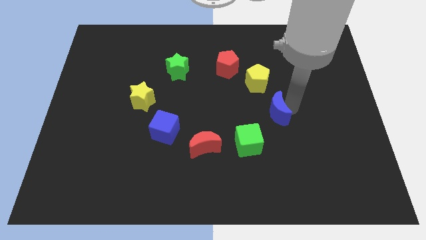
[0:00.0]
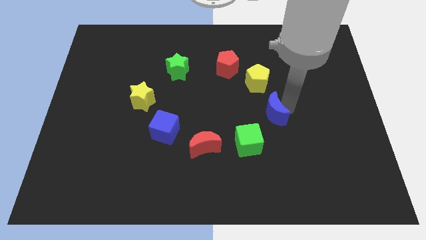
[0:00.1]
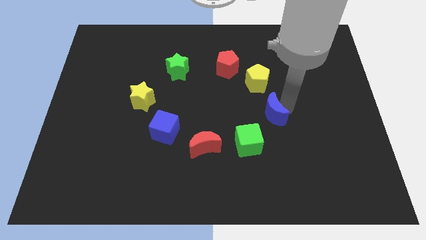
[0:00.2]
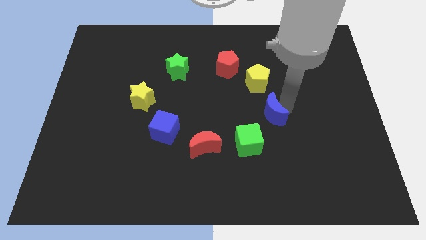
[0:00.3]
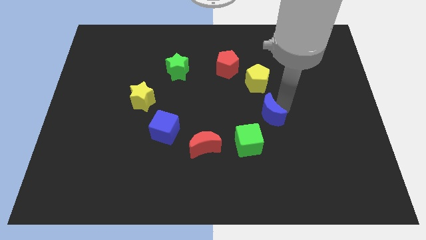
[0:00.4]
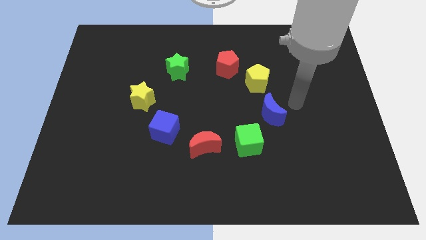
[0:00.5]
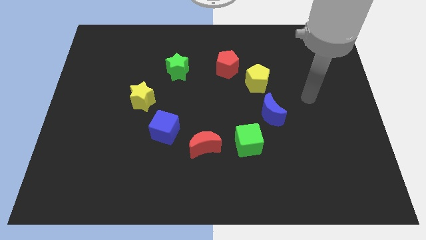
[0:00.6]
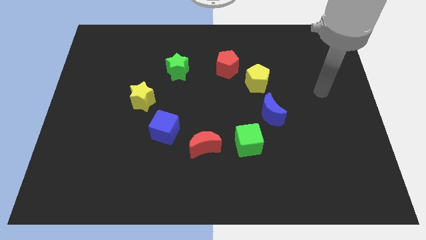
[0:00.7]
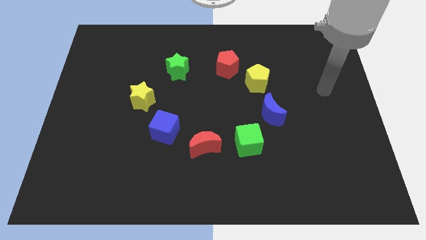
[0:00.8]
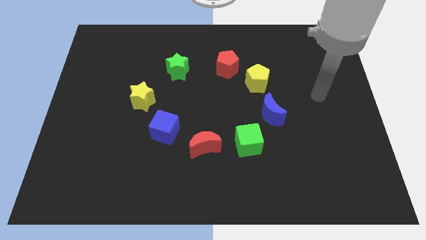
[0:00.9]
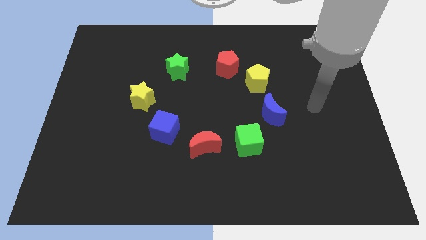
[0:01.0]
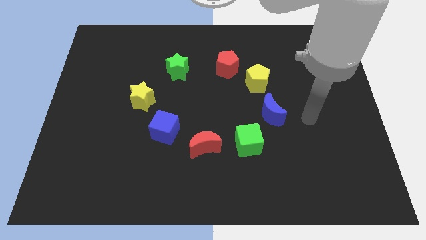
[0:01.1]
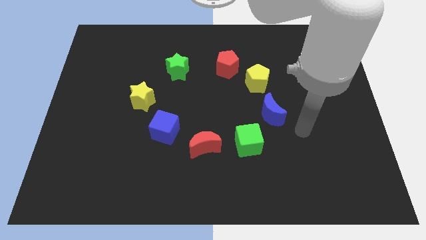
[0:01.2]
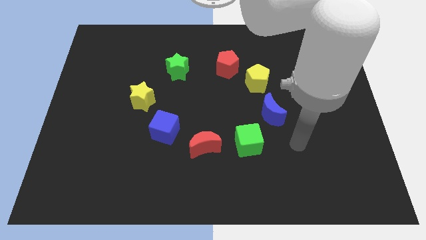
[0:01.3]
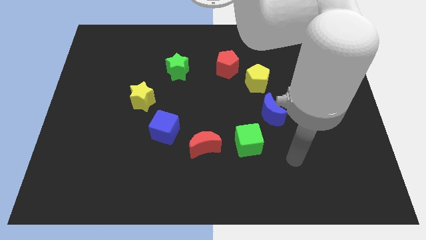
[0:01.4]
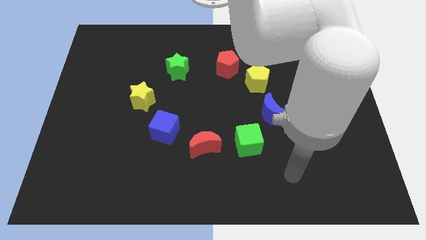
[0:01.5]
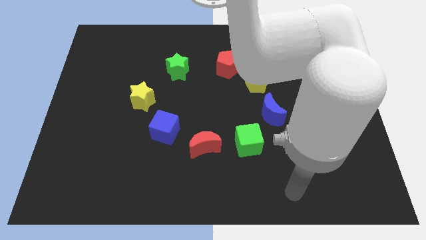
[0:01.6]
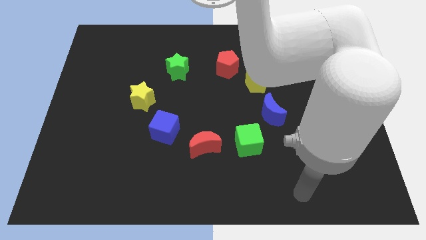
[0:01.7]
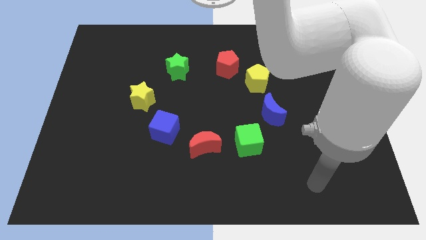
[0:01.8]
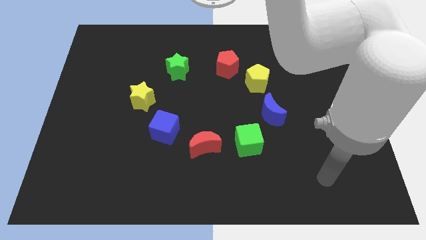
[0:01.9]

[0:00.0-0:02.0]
push the blue moon slightly to the left

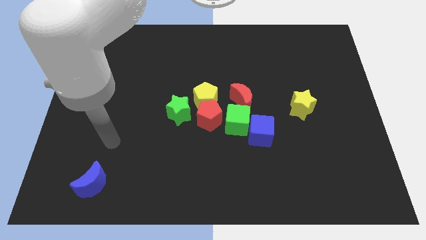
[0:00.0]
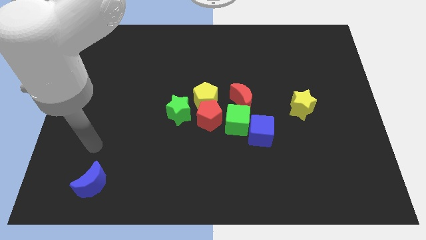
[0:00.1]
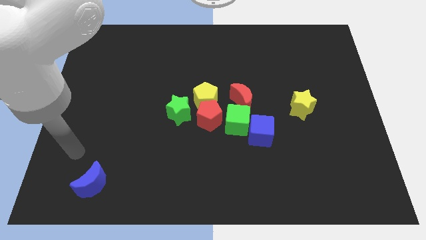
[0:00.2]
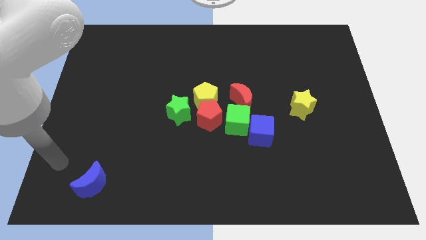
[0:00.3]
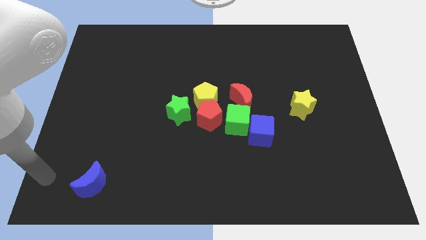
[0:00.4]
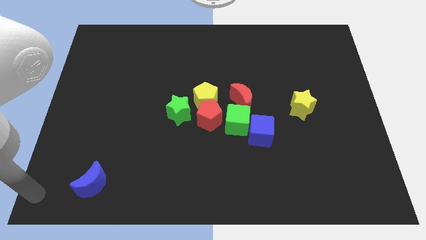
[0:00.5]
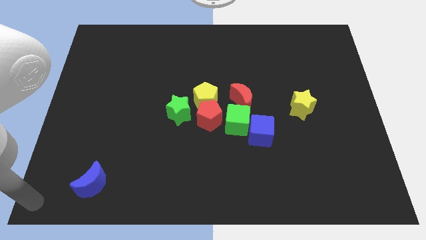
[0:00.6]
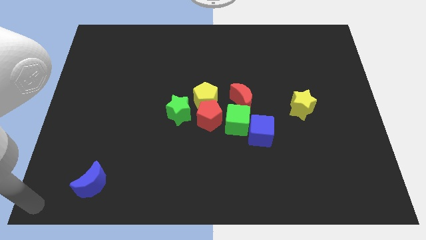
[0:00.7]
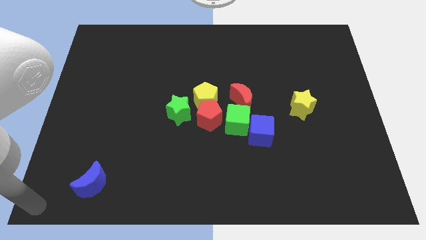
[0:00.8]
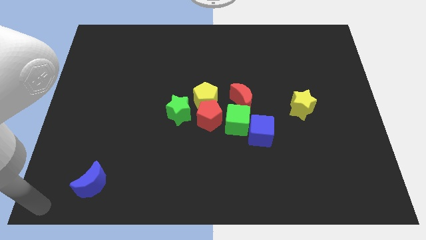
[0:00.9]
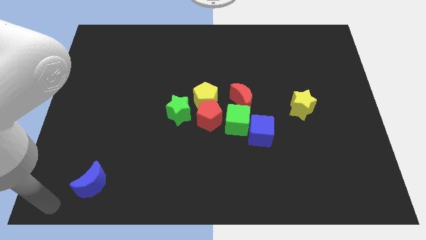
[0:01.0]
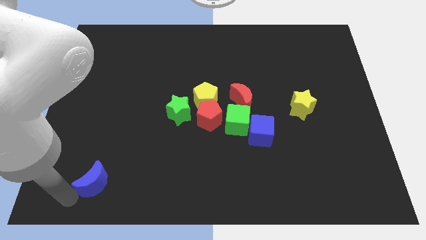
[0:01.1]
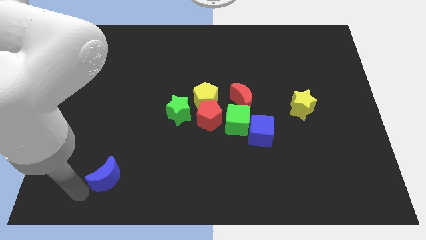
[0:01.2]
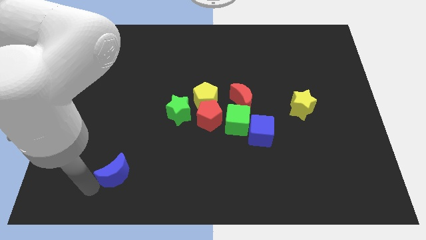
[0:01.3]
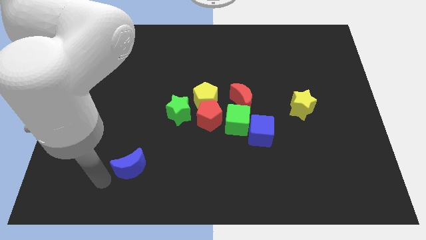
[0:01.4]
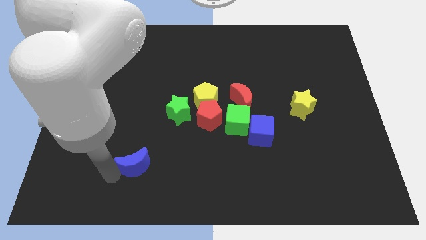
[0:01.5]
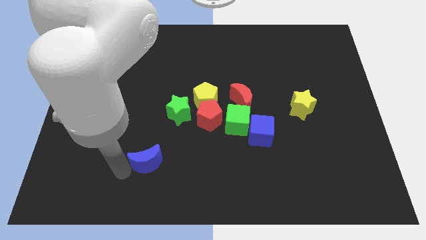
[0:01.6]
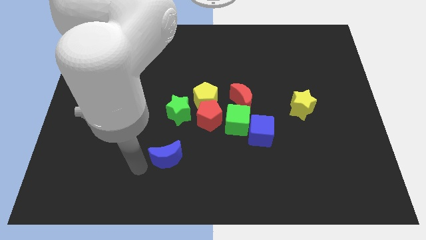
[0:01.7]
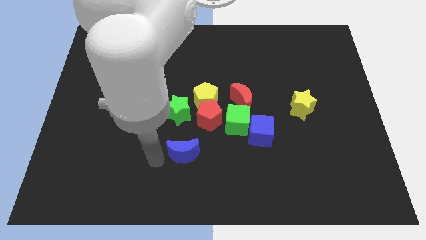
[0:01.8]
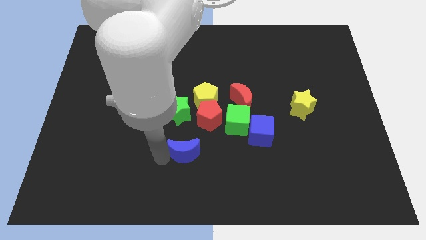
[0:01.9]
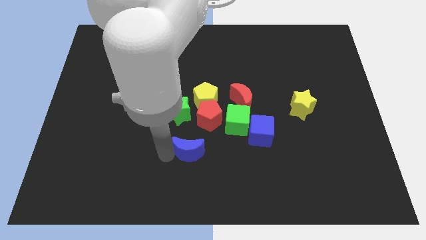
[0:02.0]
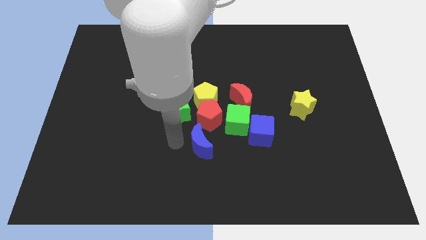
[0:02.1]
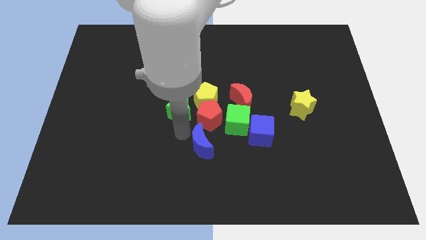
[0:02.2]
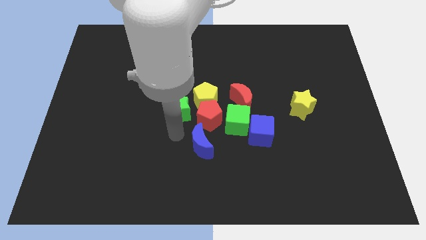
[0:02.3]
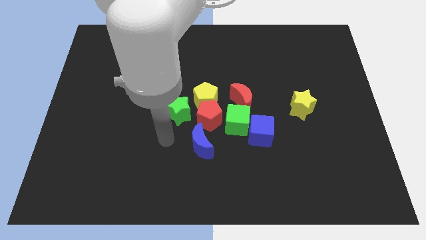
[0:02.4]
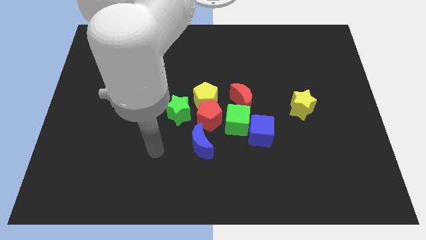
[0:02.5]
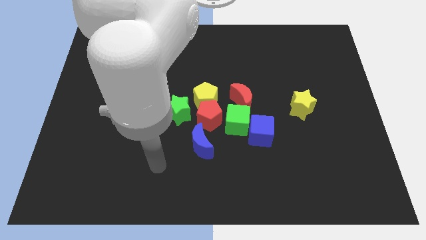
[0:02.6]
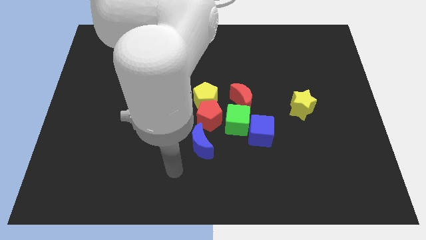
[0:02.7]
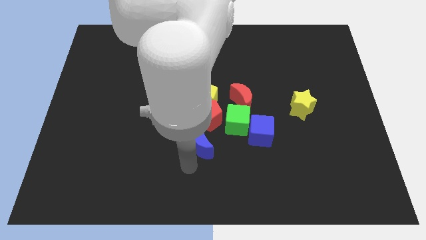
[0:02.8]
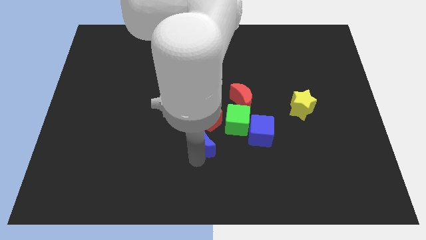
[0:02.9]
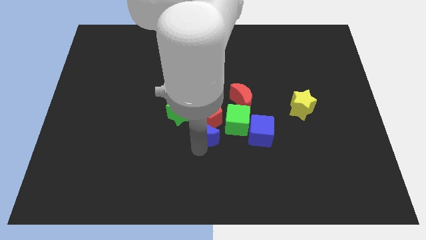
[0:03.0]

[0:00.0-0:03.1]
place blue crescent at the bottom of red pentagon

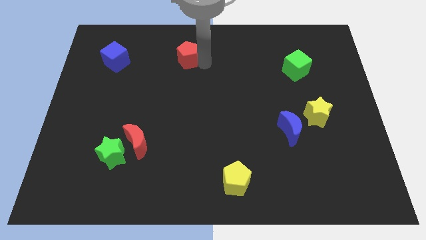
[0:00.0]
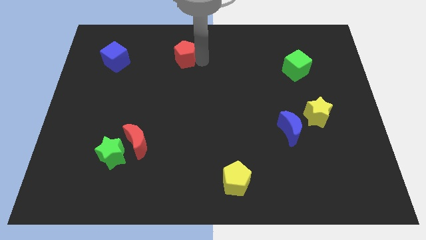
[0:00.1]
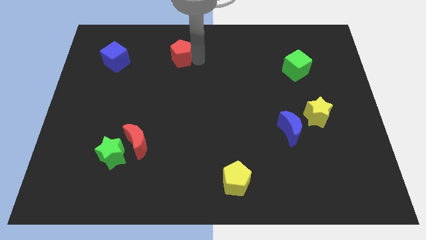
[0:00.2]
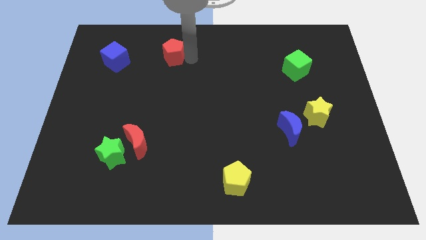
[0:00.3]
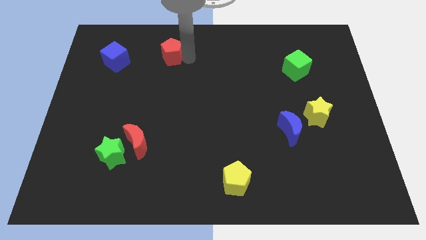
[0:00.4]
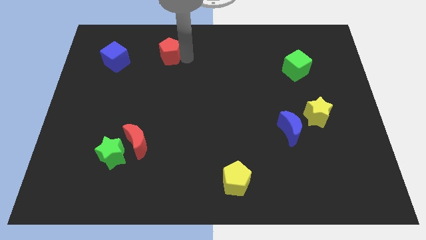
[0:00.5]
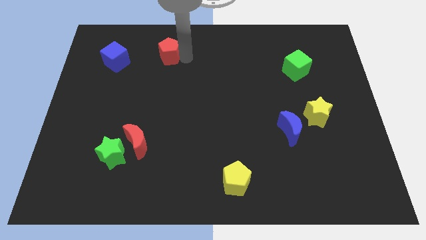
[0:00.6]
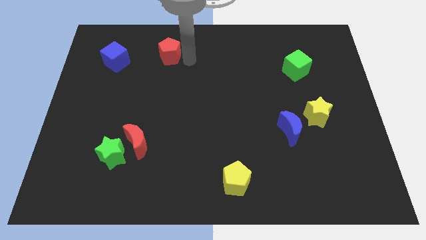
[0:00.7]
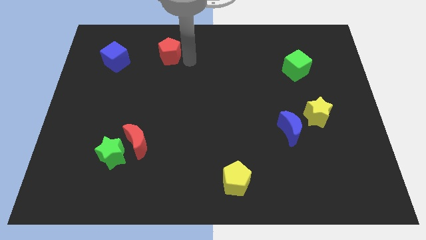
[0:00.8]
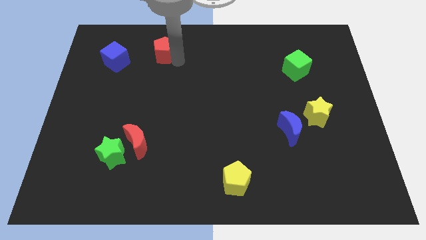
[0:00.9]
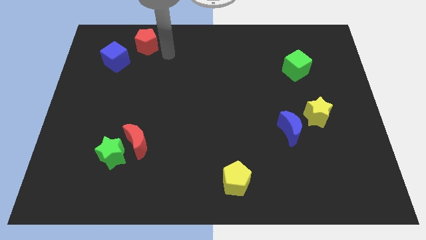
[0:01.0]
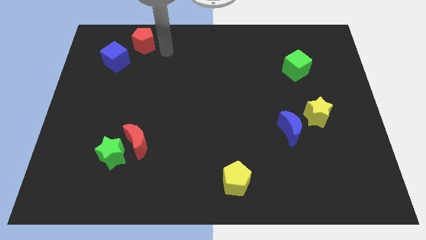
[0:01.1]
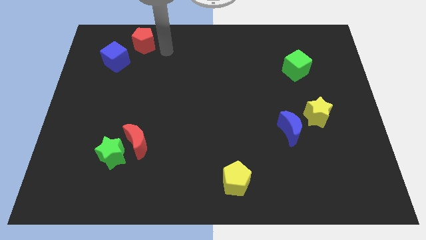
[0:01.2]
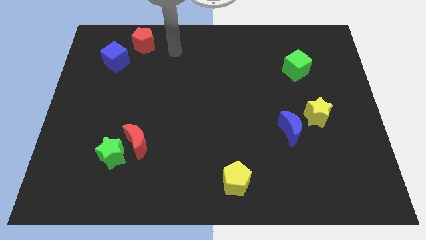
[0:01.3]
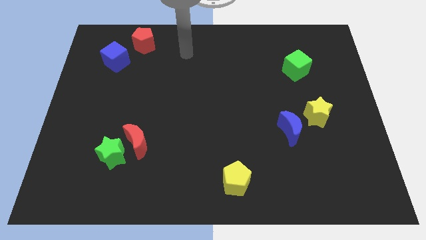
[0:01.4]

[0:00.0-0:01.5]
push the red pentagon to the top right of the blue cube

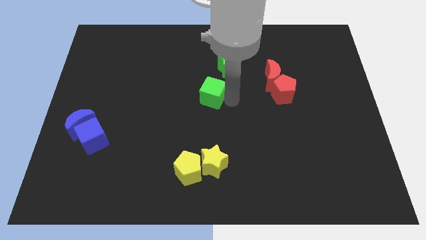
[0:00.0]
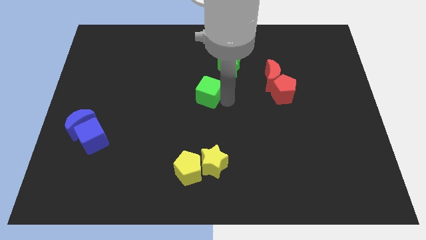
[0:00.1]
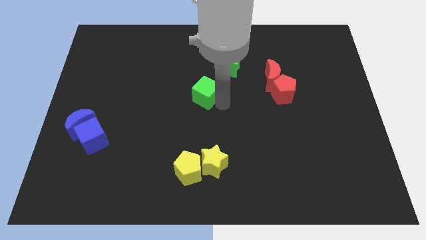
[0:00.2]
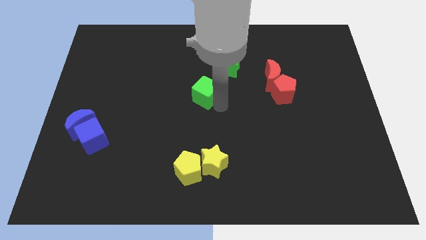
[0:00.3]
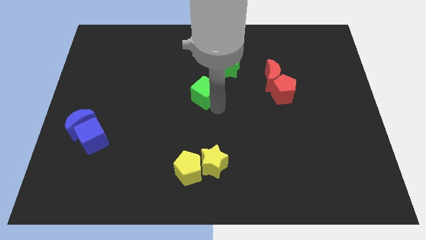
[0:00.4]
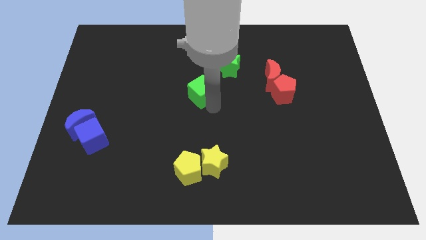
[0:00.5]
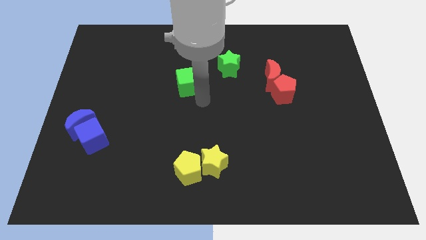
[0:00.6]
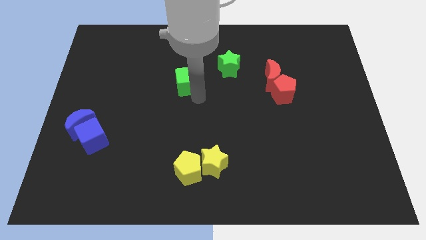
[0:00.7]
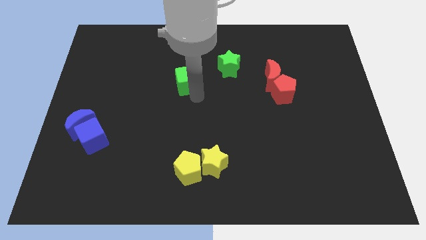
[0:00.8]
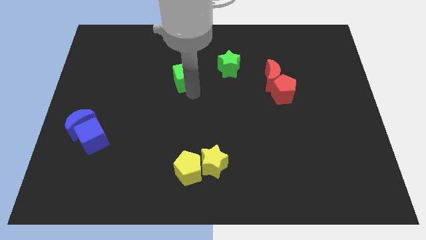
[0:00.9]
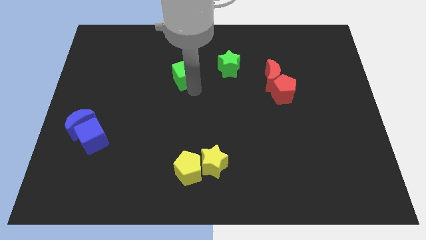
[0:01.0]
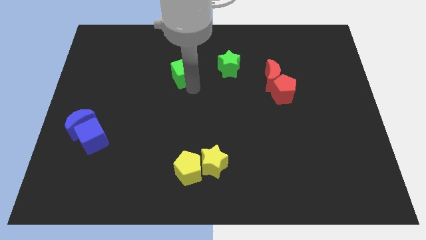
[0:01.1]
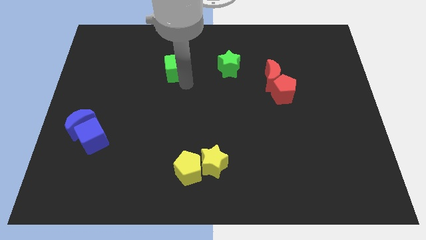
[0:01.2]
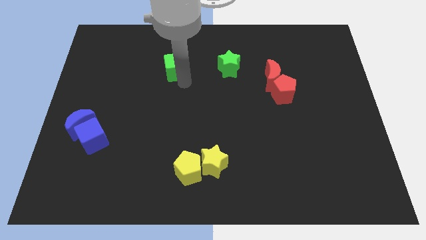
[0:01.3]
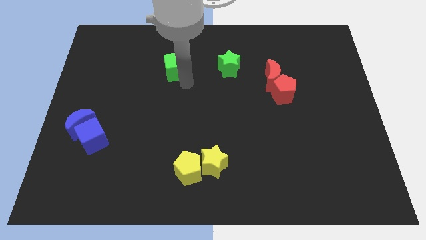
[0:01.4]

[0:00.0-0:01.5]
move the green cube to the left of the green star

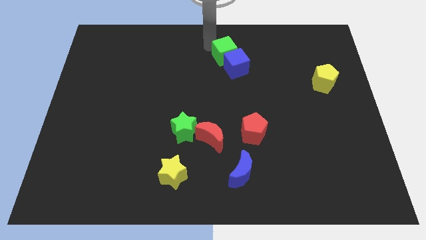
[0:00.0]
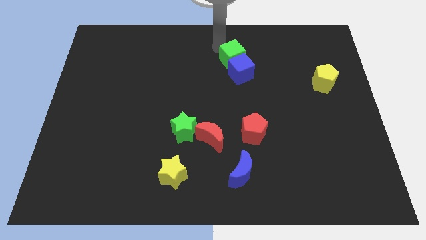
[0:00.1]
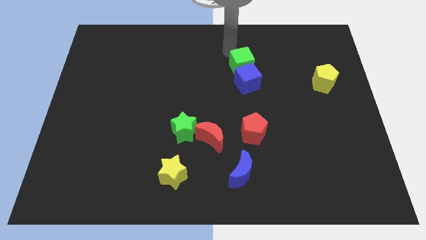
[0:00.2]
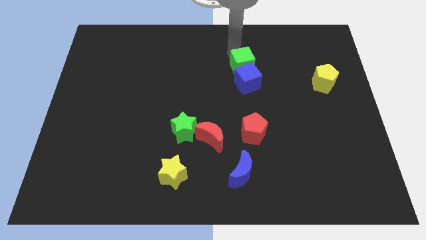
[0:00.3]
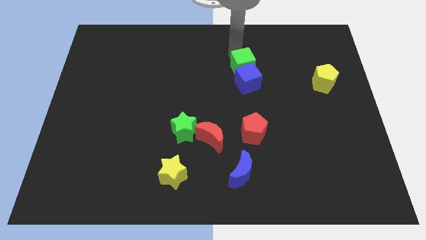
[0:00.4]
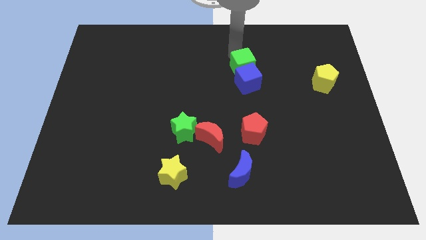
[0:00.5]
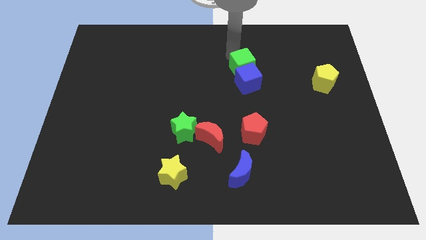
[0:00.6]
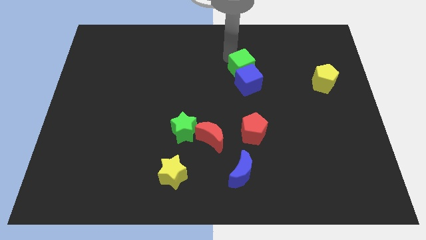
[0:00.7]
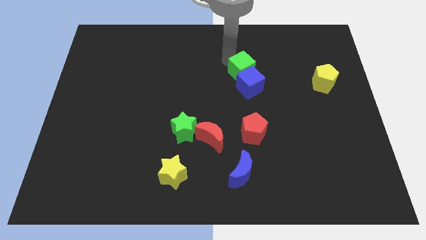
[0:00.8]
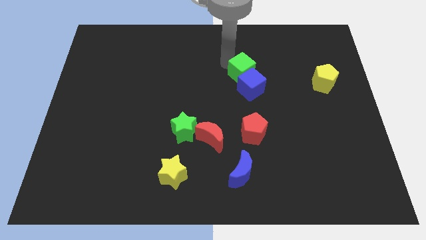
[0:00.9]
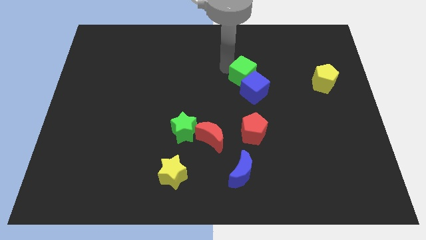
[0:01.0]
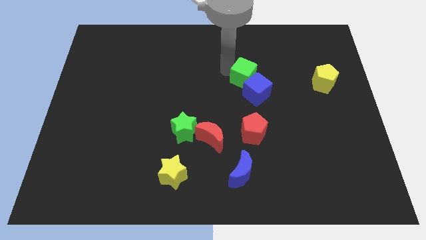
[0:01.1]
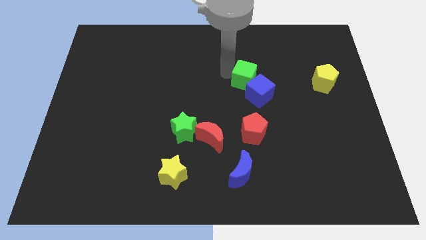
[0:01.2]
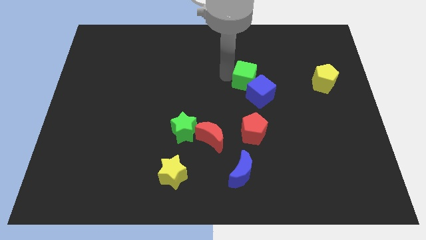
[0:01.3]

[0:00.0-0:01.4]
place the group of cubes at the top side of the red pentagon
